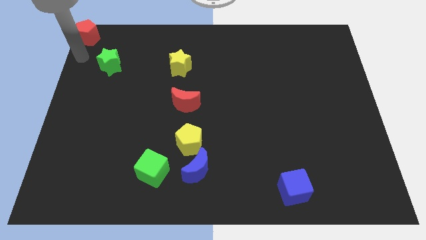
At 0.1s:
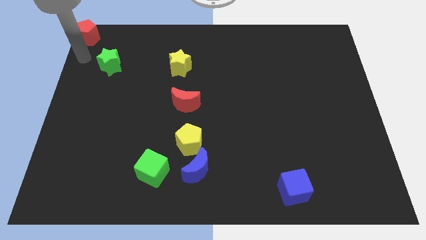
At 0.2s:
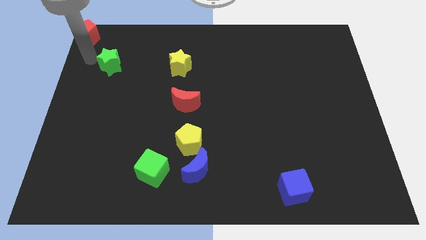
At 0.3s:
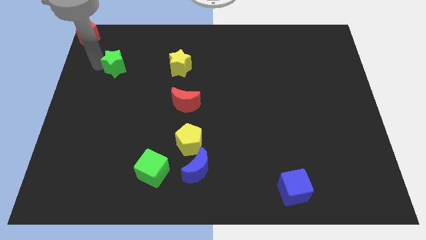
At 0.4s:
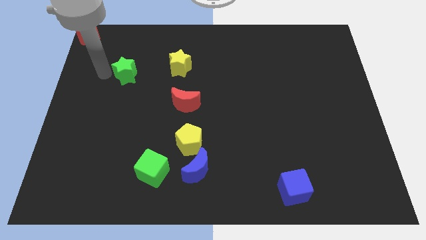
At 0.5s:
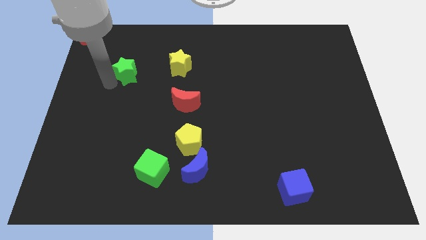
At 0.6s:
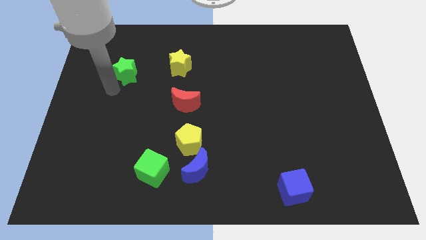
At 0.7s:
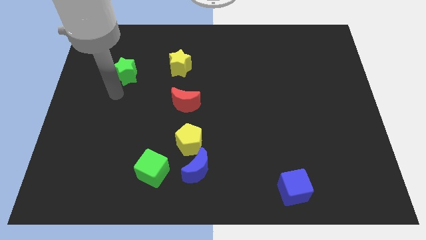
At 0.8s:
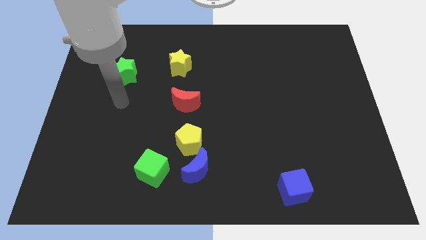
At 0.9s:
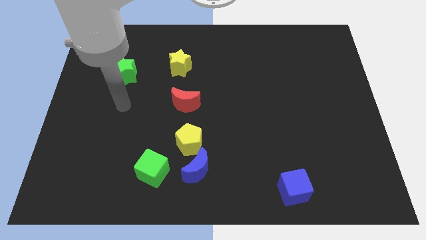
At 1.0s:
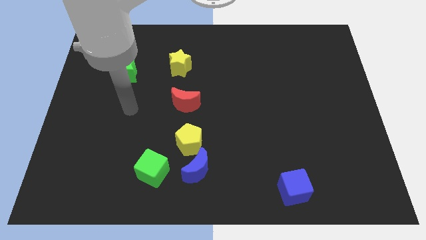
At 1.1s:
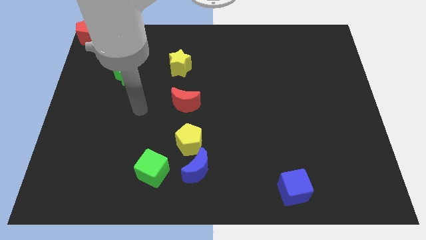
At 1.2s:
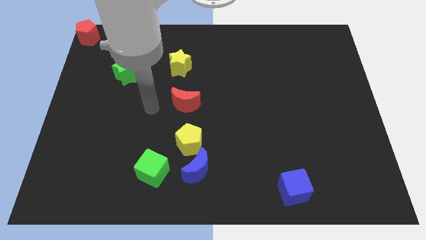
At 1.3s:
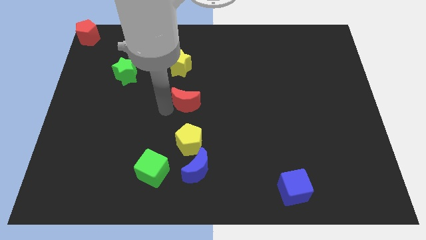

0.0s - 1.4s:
slide the green star to the left side of the yellow star

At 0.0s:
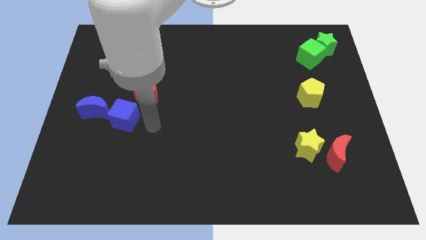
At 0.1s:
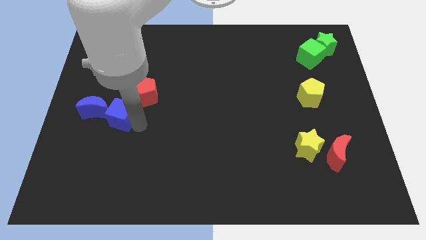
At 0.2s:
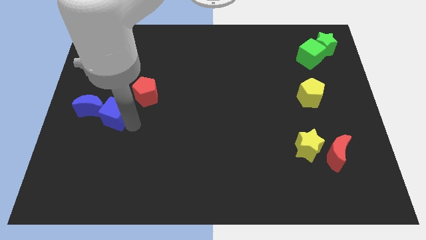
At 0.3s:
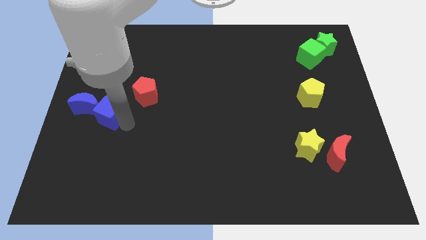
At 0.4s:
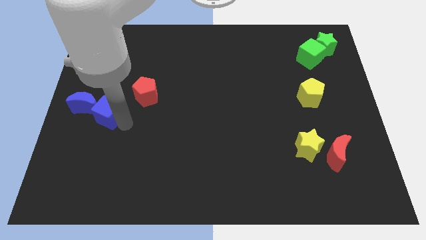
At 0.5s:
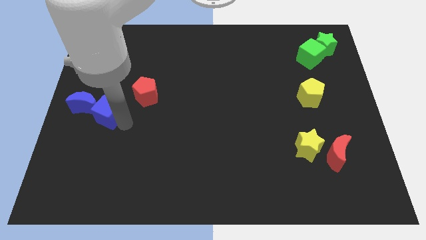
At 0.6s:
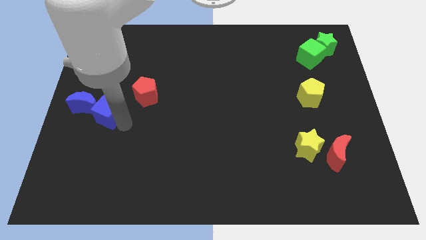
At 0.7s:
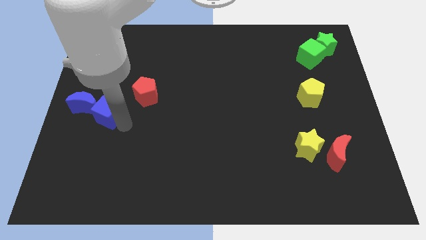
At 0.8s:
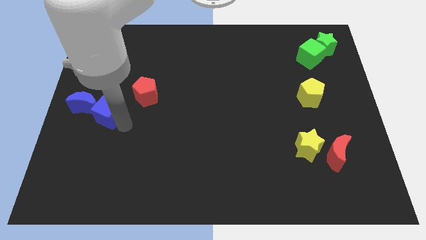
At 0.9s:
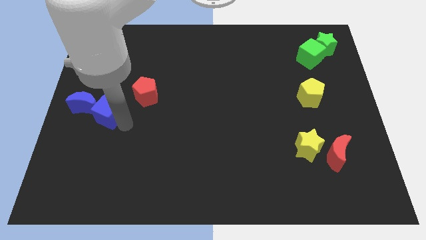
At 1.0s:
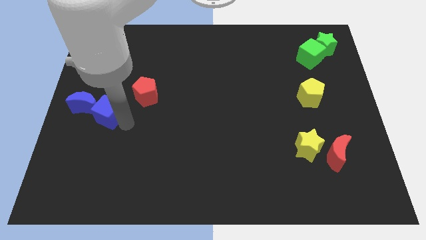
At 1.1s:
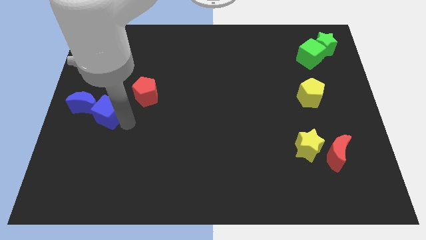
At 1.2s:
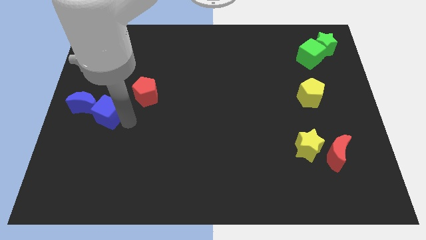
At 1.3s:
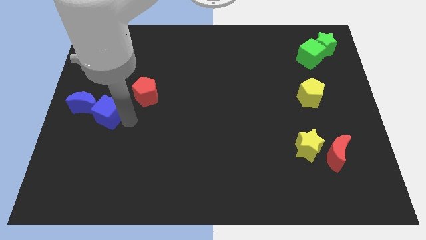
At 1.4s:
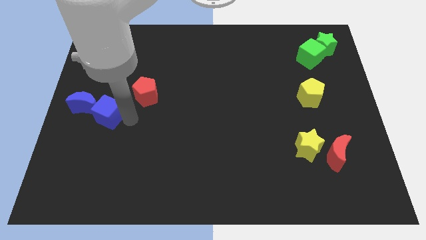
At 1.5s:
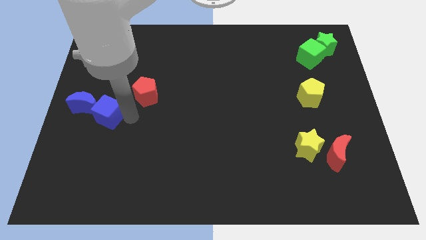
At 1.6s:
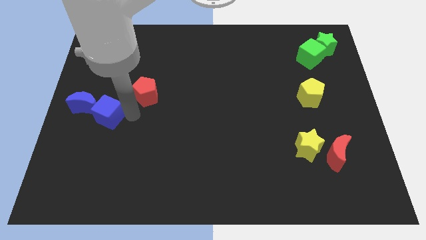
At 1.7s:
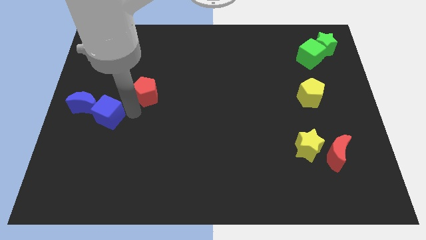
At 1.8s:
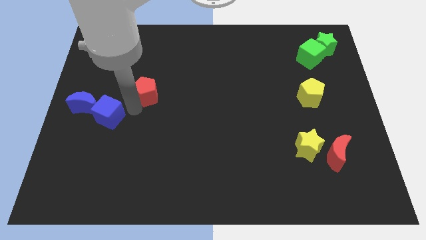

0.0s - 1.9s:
move blue cube and blue moon to the left center of the board

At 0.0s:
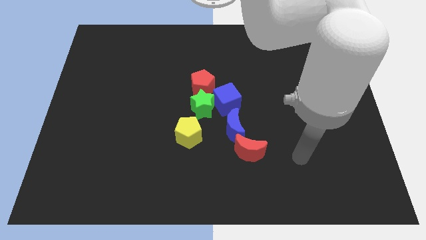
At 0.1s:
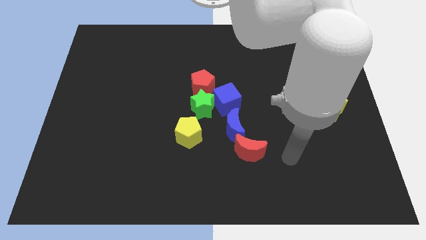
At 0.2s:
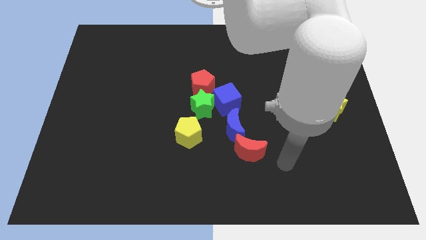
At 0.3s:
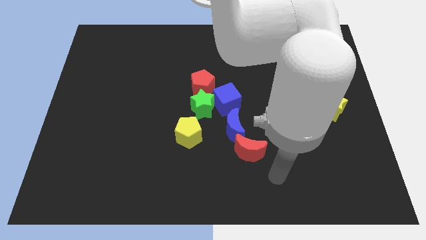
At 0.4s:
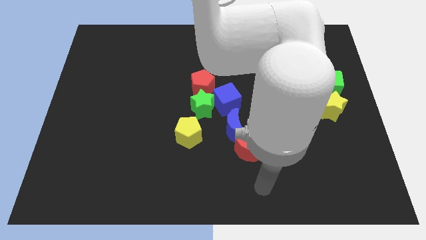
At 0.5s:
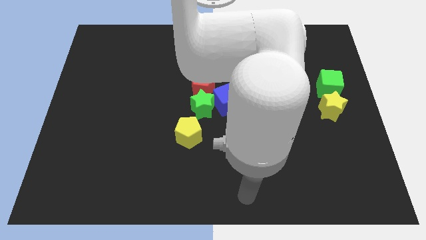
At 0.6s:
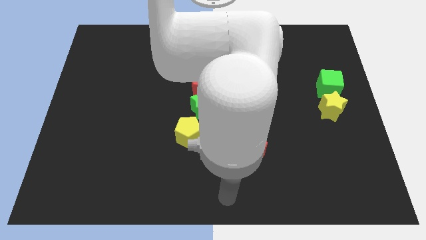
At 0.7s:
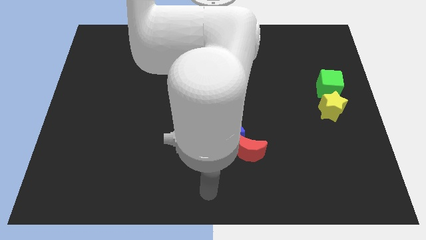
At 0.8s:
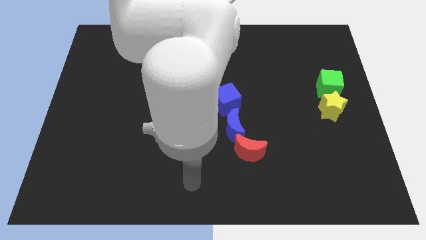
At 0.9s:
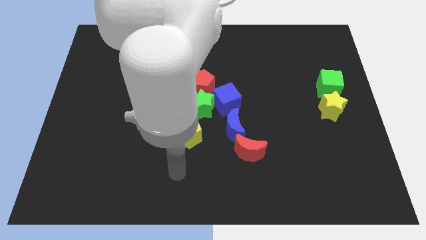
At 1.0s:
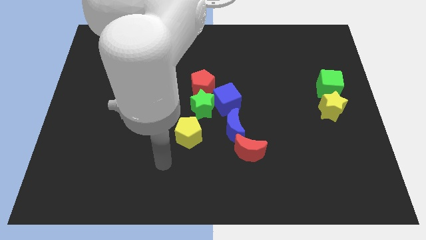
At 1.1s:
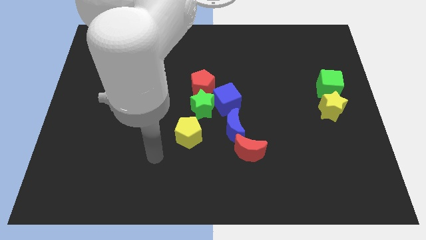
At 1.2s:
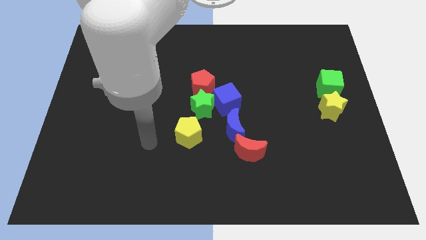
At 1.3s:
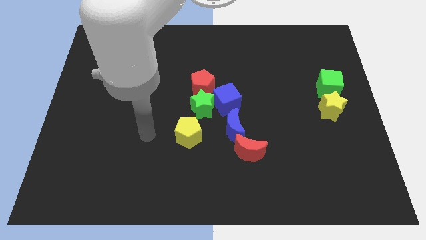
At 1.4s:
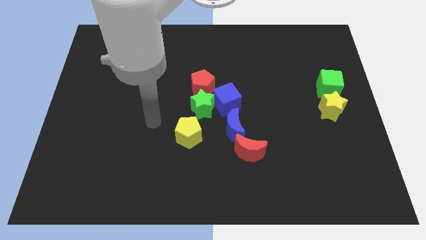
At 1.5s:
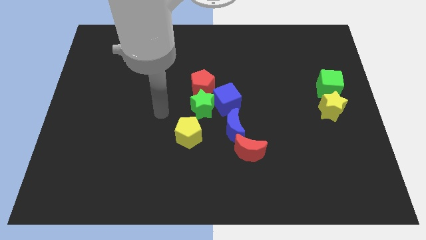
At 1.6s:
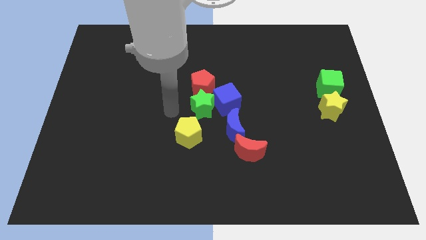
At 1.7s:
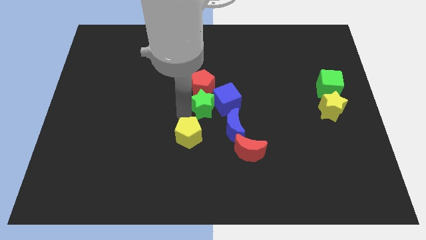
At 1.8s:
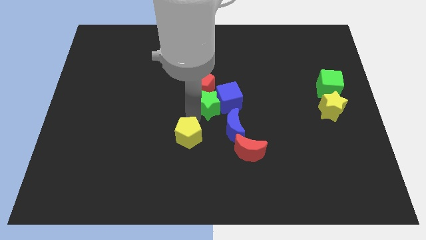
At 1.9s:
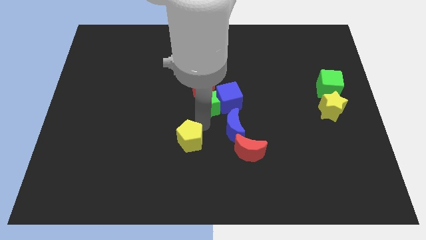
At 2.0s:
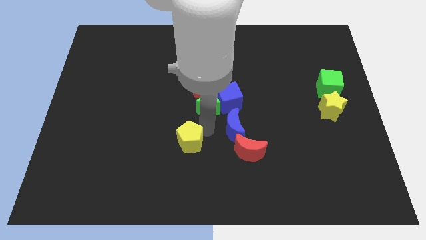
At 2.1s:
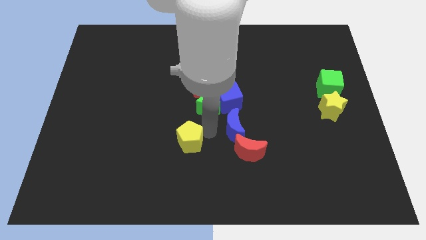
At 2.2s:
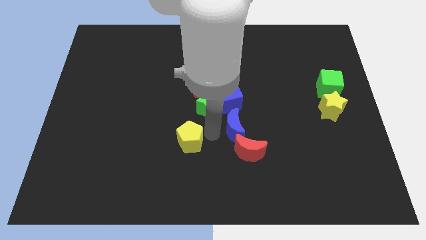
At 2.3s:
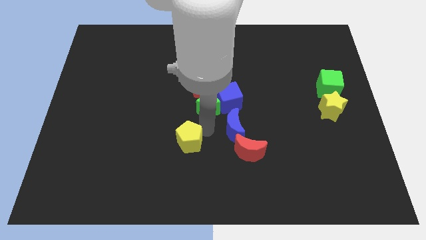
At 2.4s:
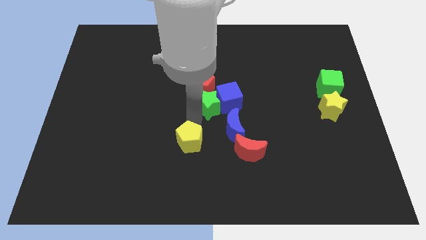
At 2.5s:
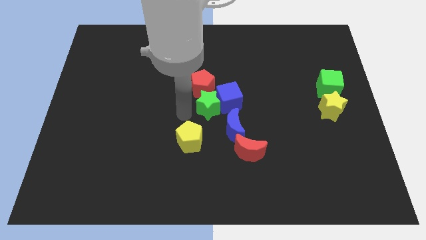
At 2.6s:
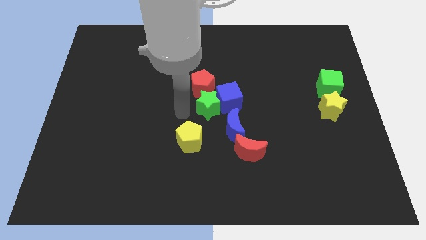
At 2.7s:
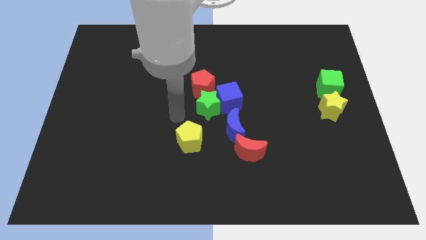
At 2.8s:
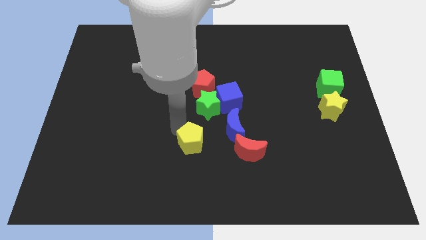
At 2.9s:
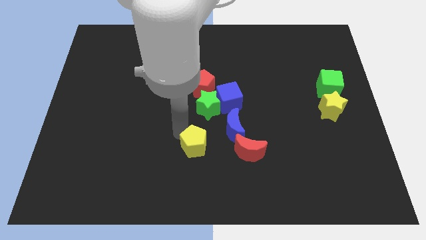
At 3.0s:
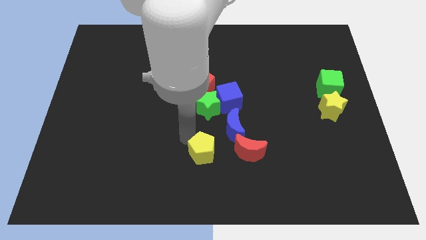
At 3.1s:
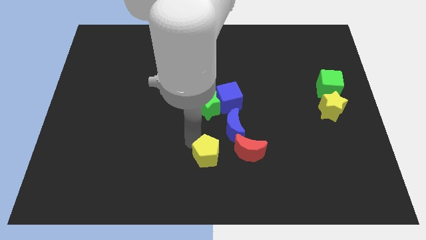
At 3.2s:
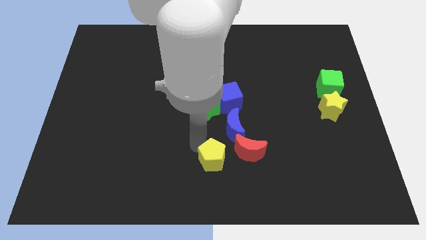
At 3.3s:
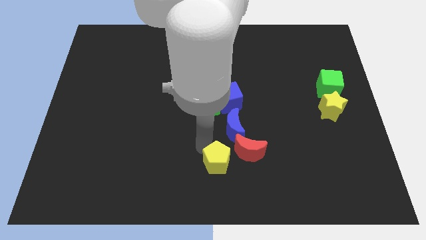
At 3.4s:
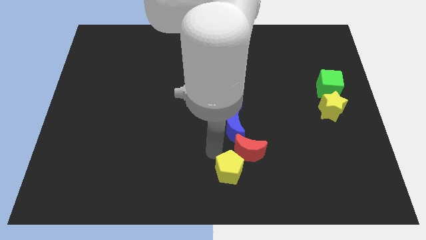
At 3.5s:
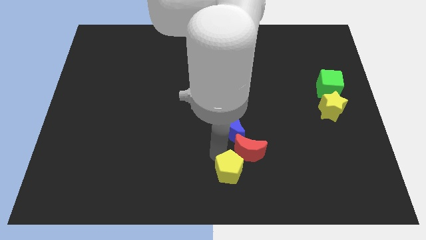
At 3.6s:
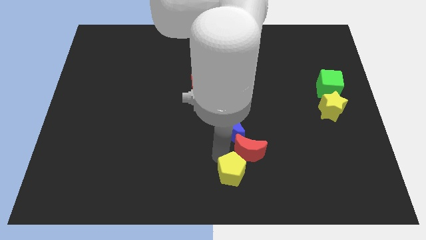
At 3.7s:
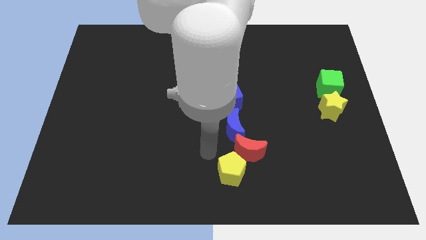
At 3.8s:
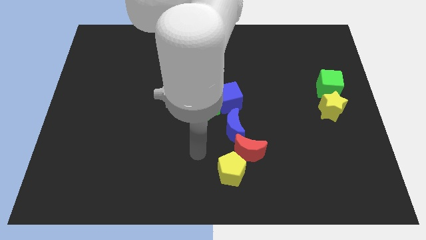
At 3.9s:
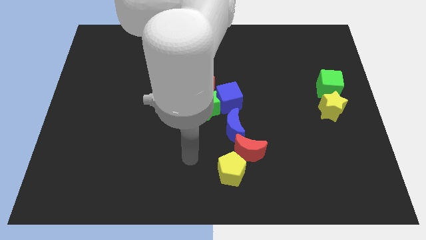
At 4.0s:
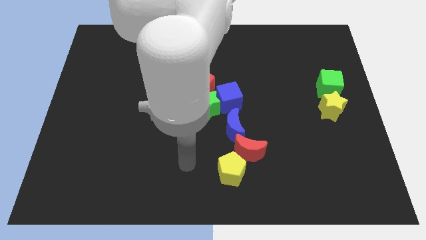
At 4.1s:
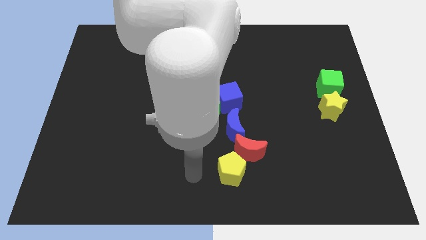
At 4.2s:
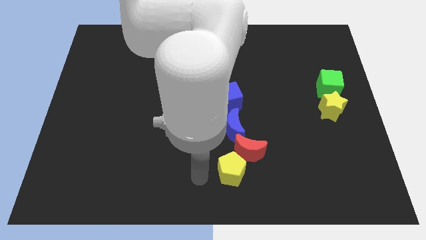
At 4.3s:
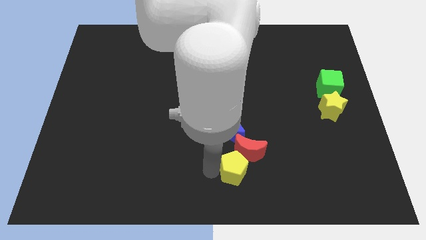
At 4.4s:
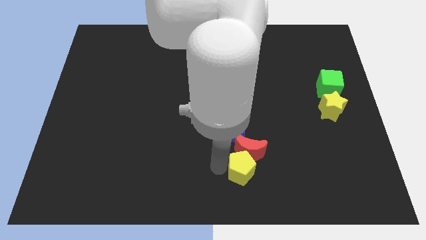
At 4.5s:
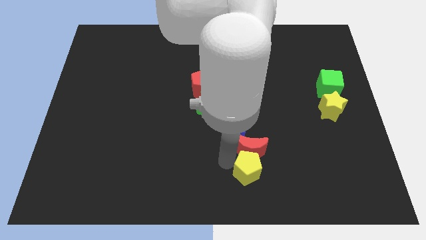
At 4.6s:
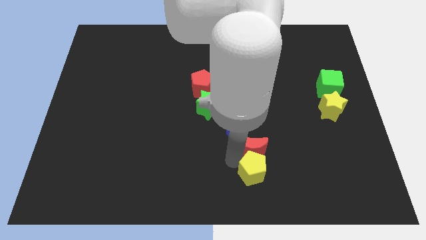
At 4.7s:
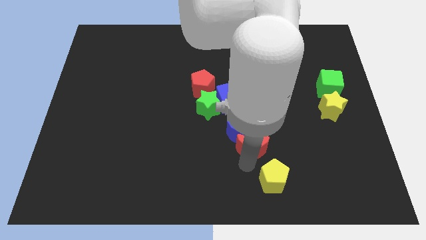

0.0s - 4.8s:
push the yellow pentagon below the red crescent

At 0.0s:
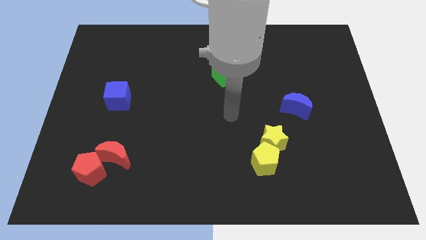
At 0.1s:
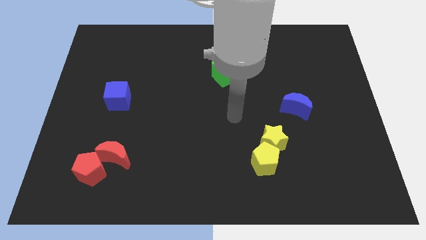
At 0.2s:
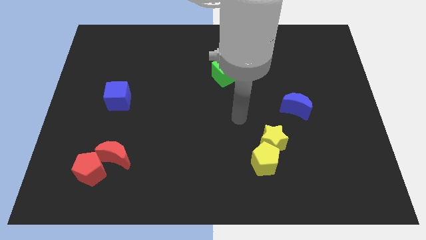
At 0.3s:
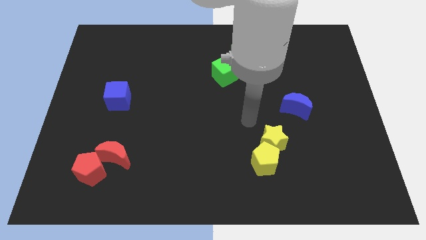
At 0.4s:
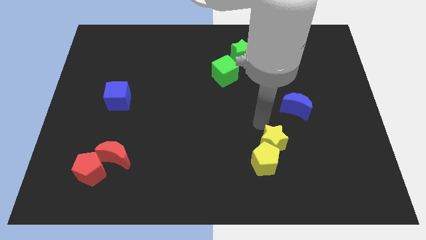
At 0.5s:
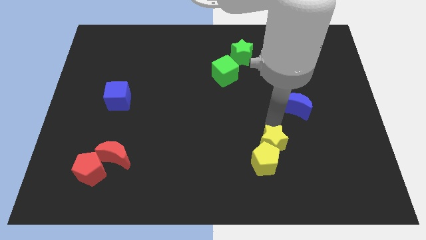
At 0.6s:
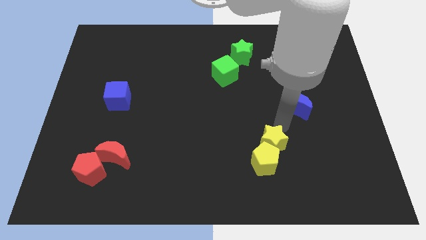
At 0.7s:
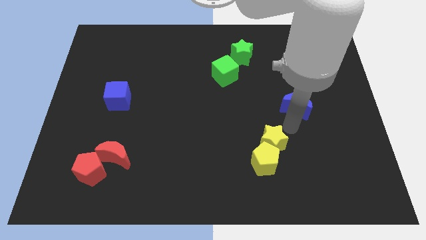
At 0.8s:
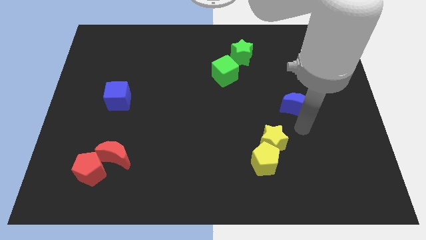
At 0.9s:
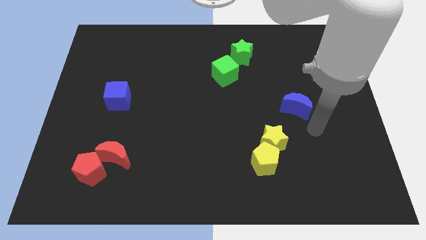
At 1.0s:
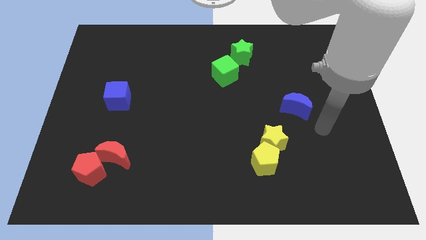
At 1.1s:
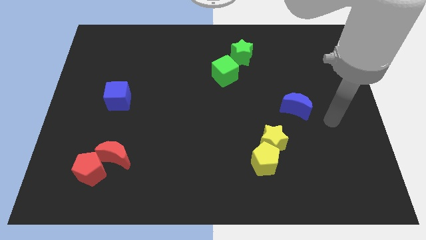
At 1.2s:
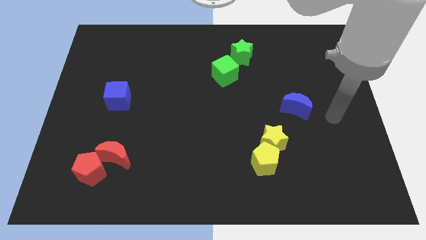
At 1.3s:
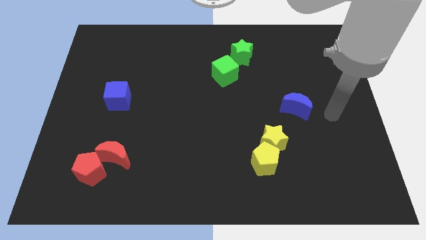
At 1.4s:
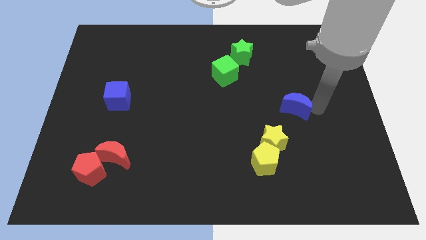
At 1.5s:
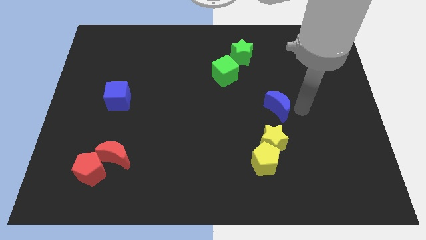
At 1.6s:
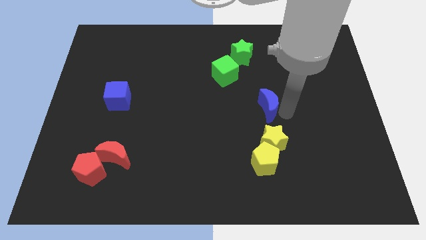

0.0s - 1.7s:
push the blue crescent above the yellow star
